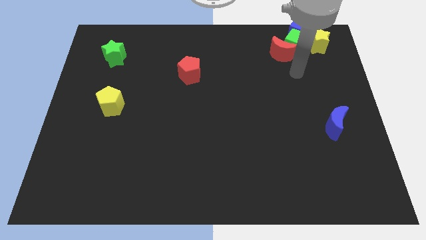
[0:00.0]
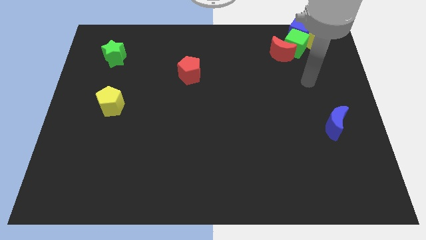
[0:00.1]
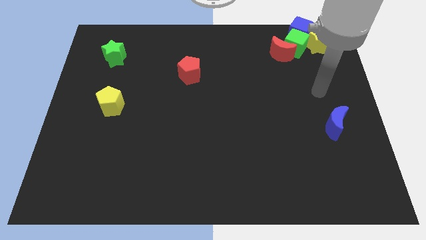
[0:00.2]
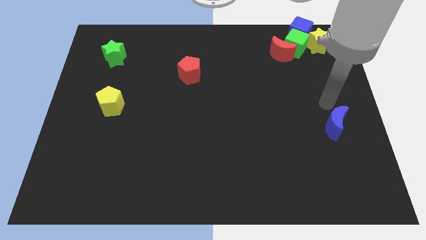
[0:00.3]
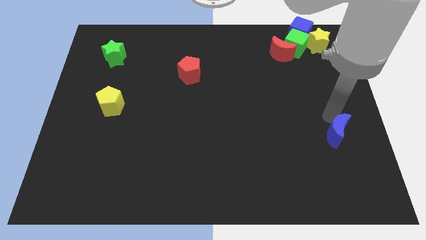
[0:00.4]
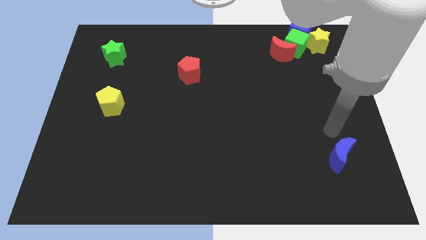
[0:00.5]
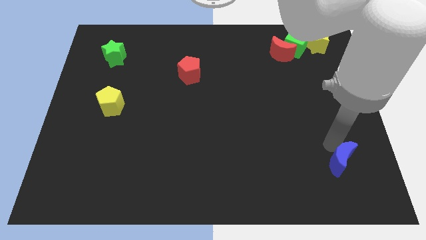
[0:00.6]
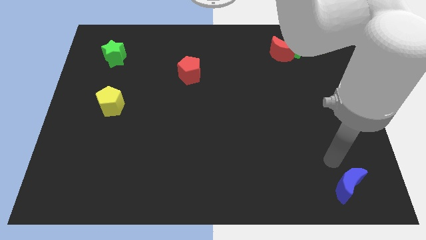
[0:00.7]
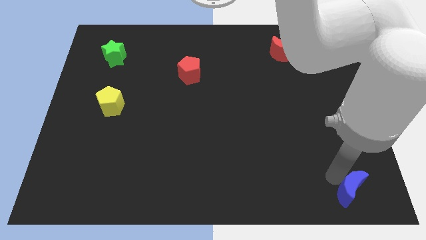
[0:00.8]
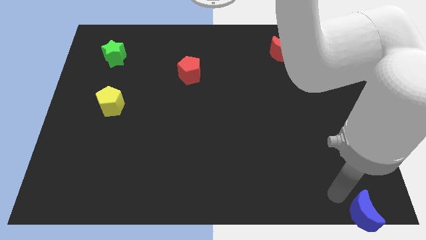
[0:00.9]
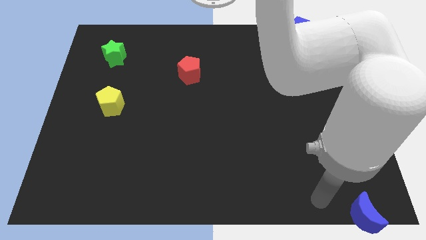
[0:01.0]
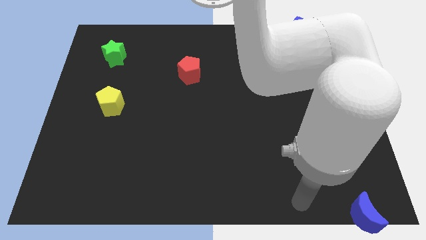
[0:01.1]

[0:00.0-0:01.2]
move the blue moon towards the bottom

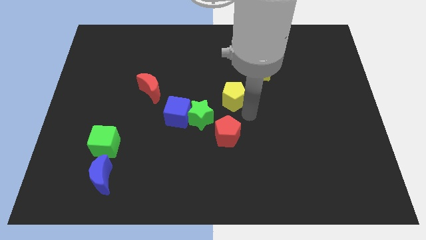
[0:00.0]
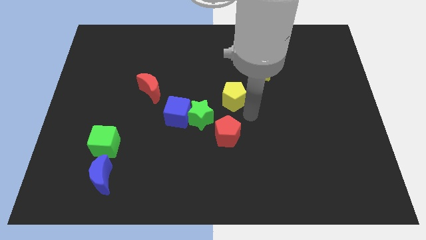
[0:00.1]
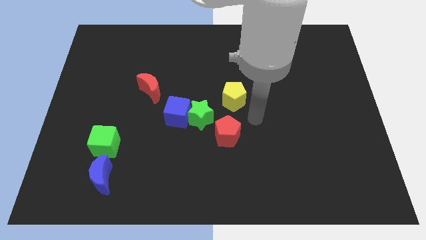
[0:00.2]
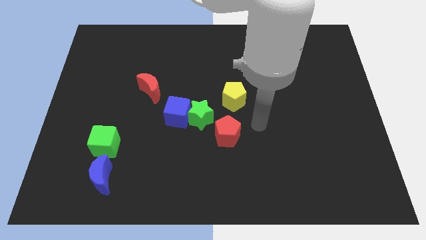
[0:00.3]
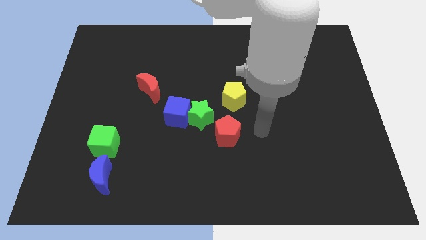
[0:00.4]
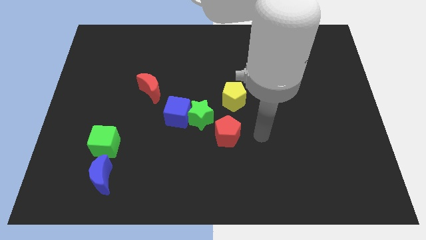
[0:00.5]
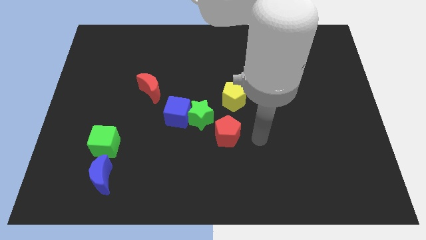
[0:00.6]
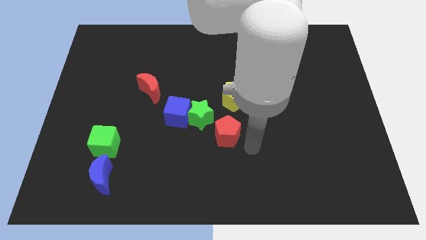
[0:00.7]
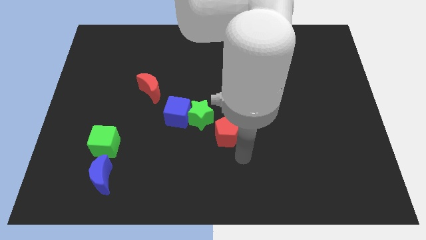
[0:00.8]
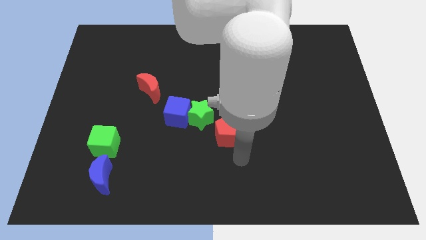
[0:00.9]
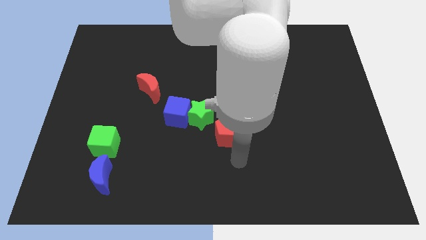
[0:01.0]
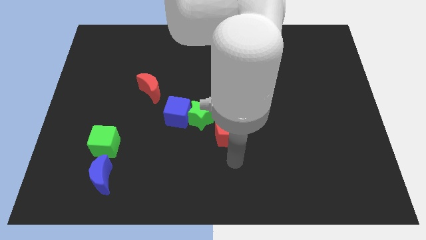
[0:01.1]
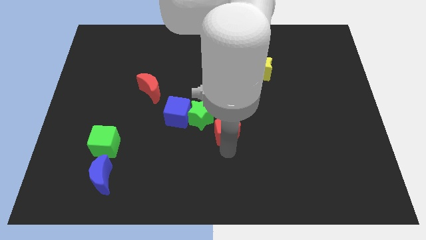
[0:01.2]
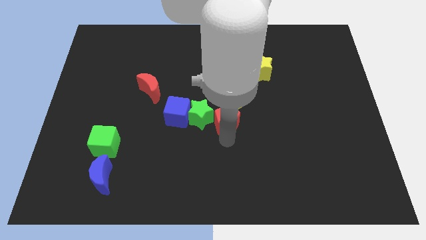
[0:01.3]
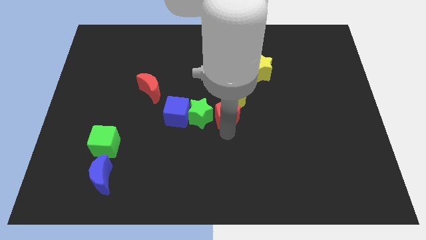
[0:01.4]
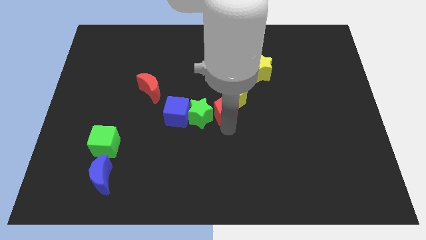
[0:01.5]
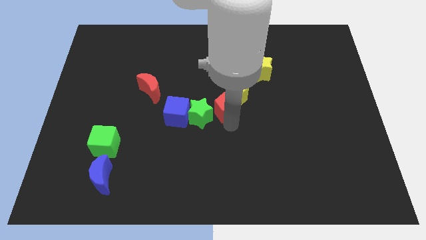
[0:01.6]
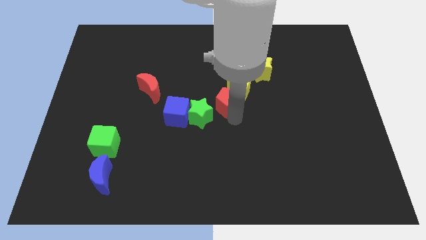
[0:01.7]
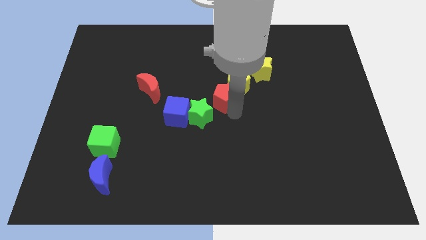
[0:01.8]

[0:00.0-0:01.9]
push the red pentagon into the yellow pentagon

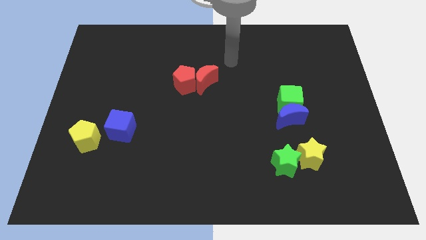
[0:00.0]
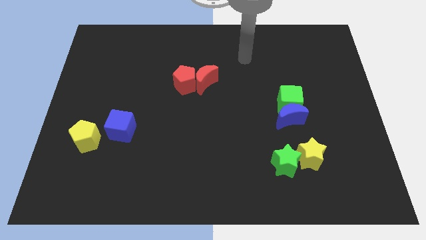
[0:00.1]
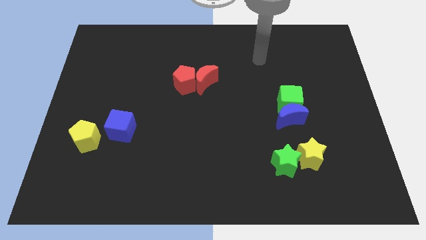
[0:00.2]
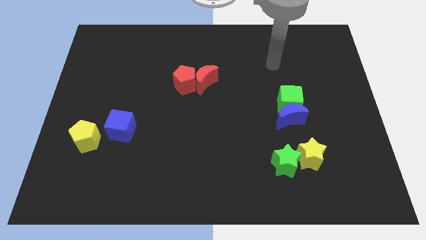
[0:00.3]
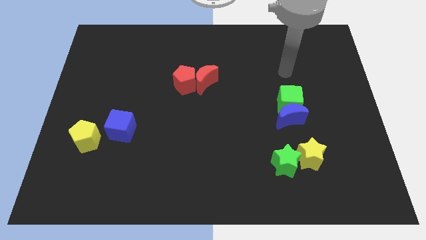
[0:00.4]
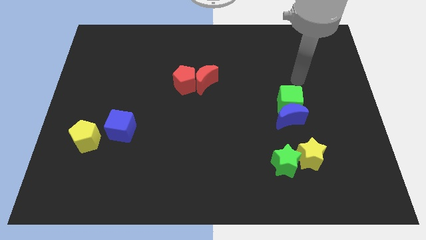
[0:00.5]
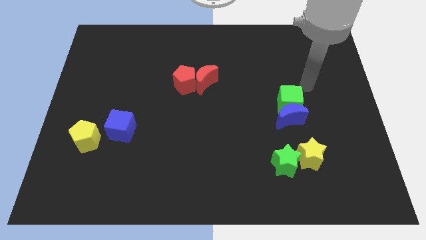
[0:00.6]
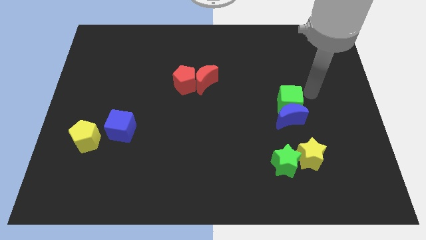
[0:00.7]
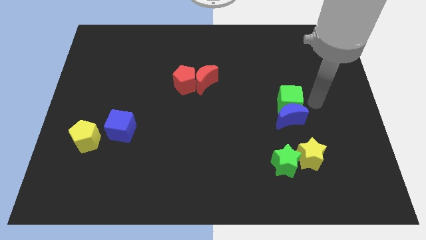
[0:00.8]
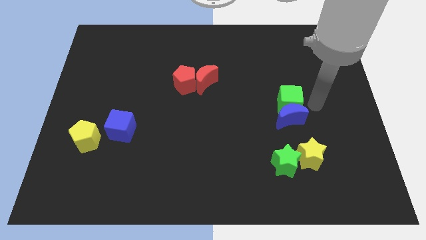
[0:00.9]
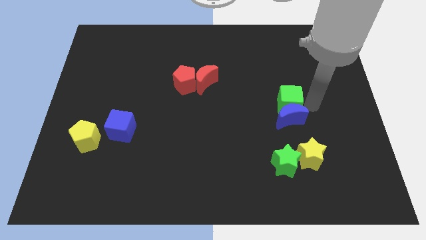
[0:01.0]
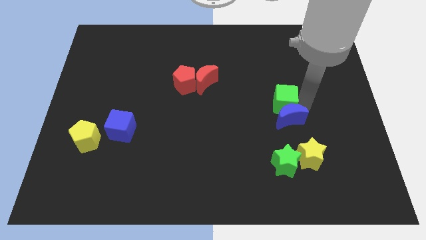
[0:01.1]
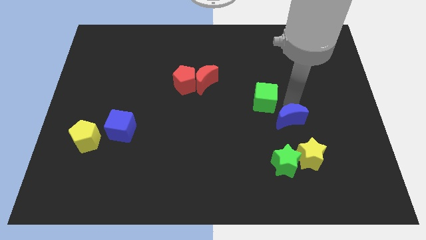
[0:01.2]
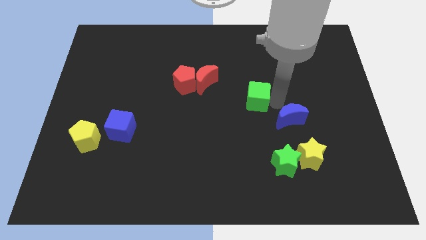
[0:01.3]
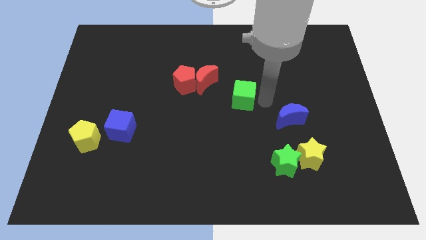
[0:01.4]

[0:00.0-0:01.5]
move the green cube diagonally left above the blue crescent

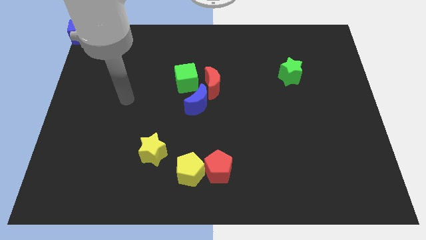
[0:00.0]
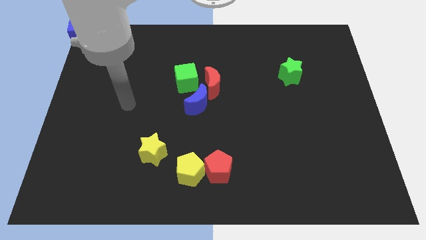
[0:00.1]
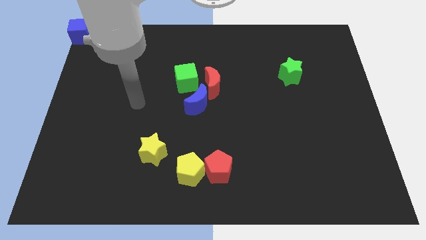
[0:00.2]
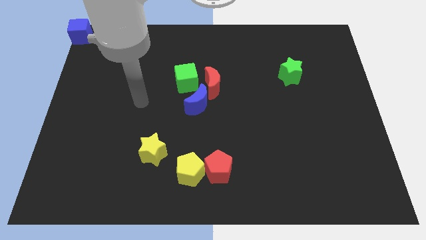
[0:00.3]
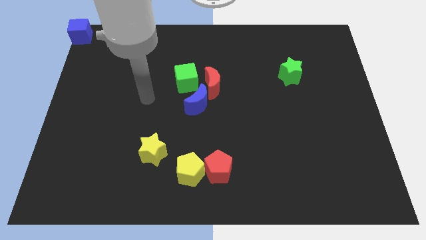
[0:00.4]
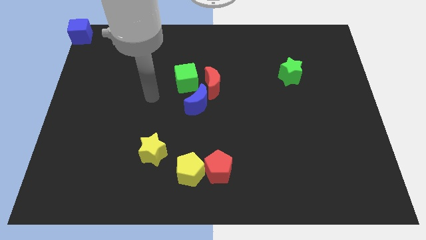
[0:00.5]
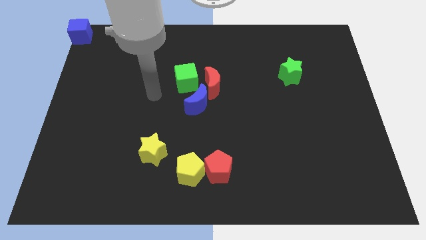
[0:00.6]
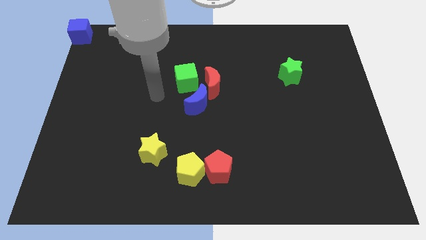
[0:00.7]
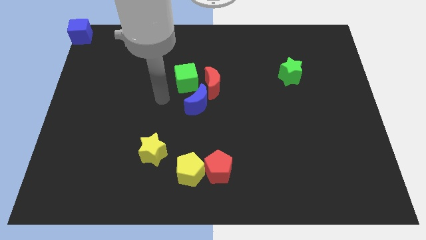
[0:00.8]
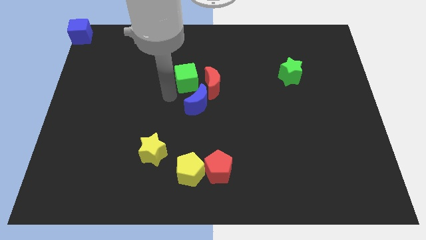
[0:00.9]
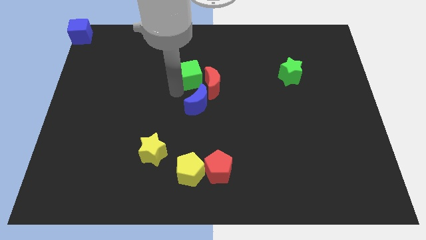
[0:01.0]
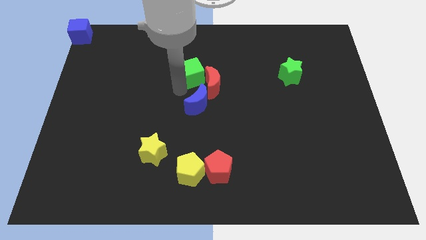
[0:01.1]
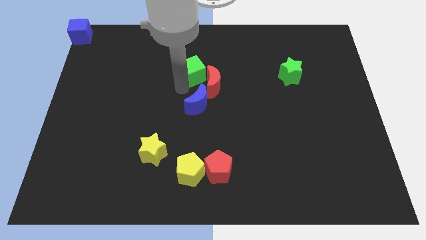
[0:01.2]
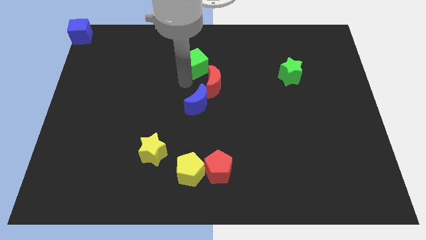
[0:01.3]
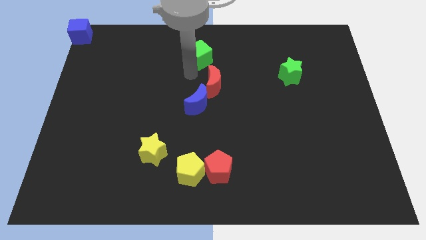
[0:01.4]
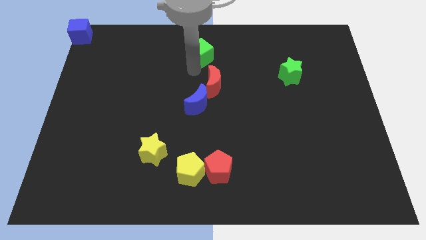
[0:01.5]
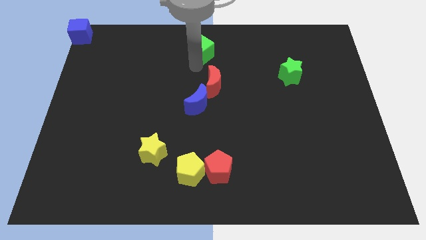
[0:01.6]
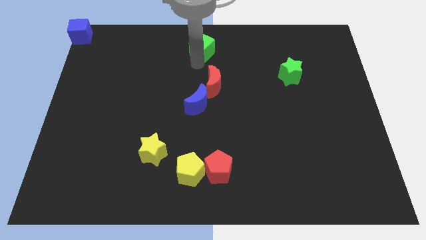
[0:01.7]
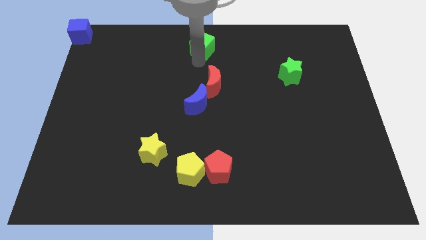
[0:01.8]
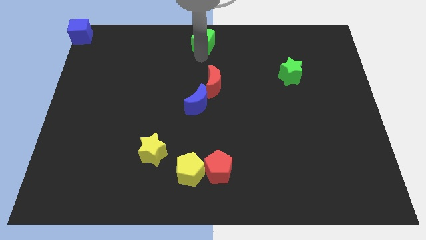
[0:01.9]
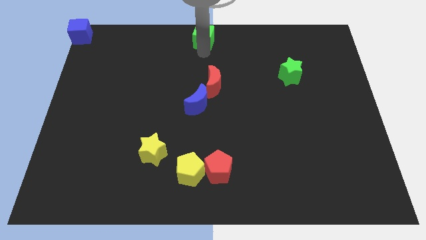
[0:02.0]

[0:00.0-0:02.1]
push the green cube towards top center of the board

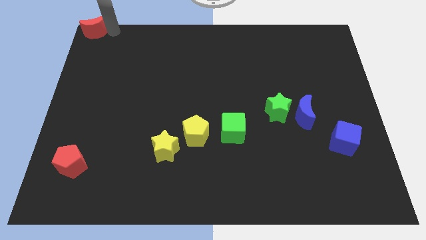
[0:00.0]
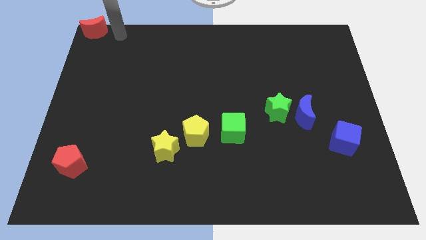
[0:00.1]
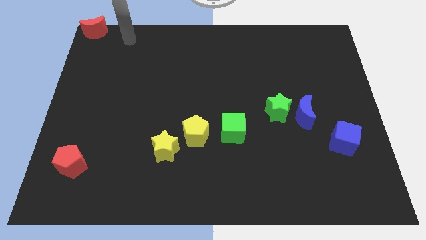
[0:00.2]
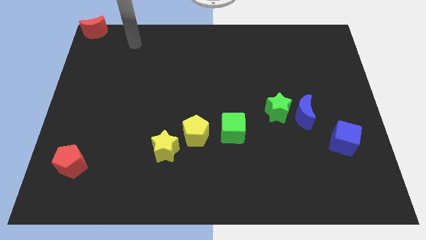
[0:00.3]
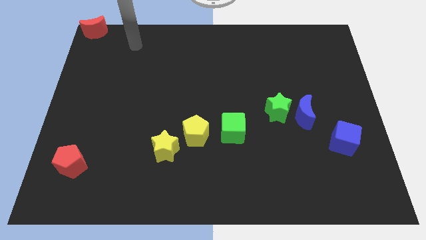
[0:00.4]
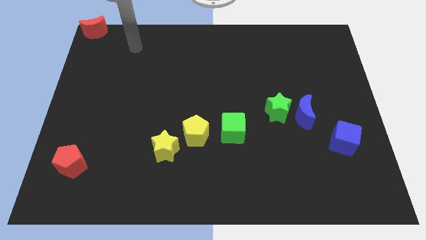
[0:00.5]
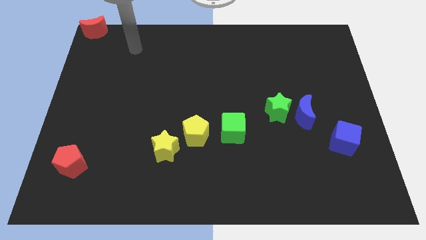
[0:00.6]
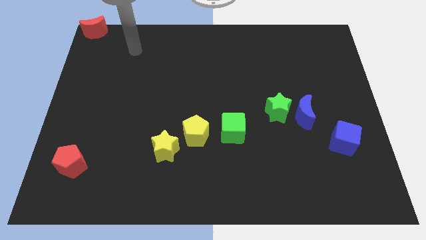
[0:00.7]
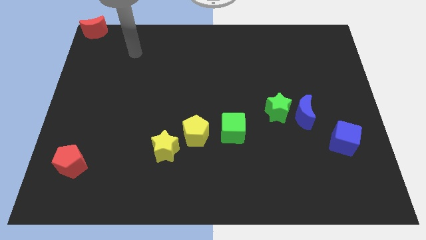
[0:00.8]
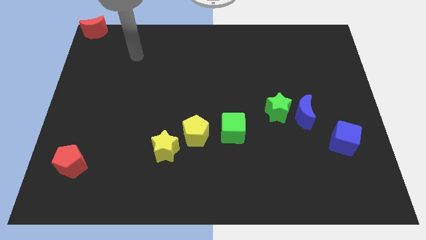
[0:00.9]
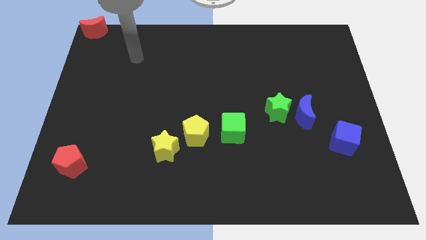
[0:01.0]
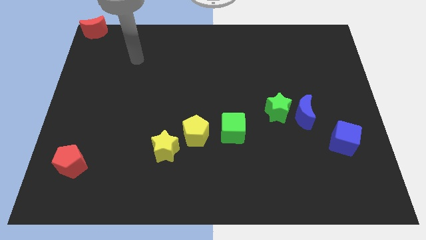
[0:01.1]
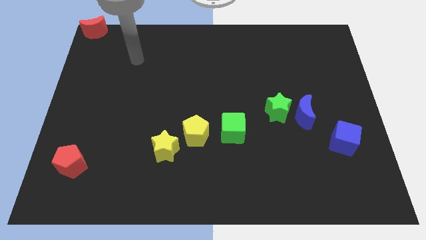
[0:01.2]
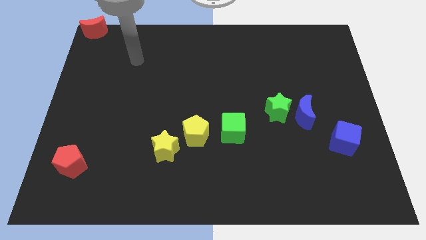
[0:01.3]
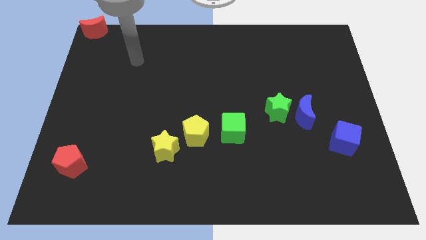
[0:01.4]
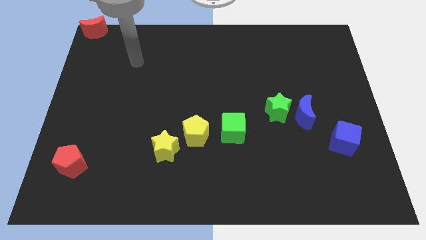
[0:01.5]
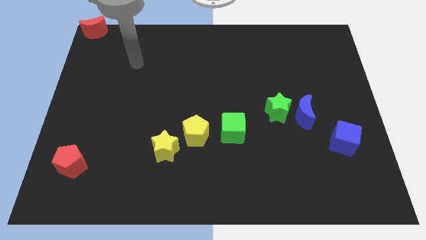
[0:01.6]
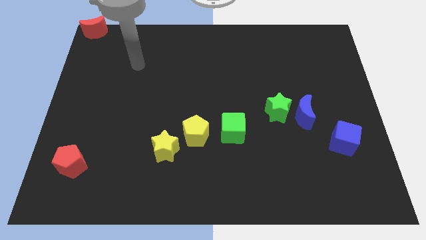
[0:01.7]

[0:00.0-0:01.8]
move your arm away from the red moon

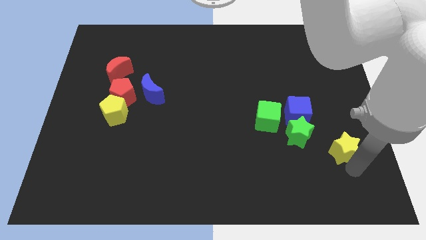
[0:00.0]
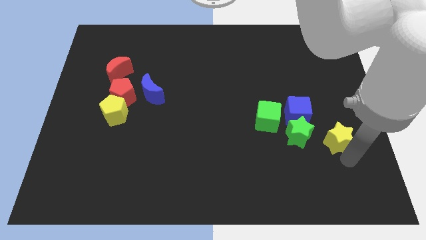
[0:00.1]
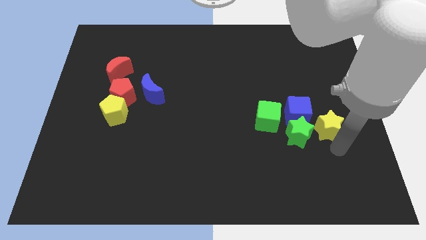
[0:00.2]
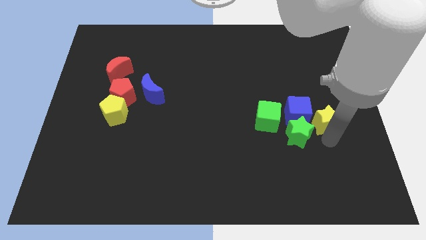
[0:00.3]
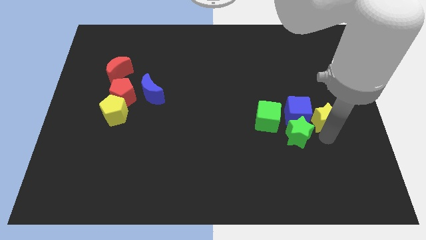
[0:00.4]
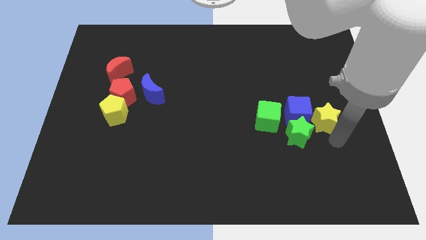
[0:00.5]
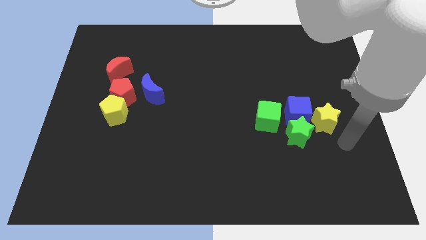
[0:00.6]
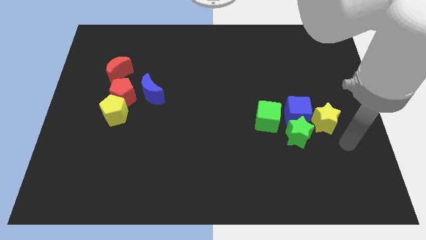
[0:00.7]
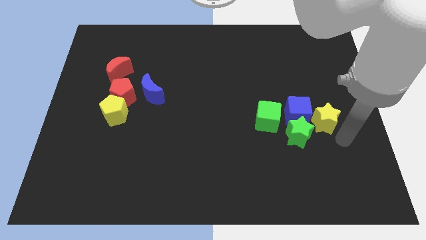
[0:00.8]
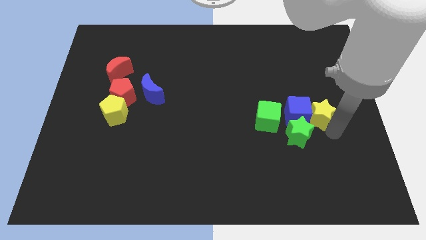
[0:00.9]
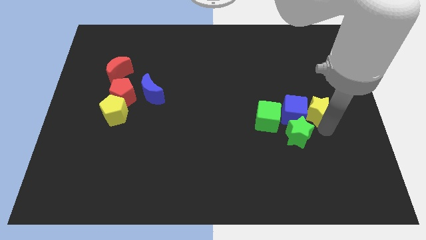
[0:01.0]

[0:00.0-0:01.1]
push the yellow star close to the blue cube
